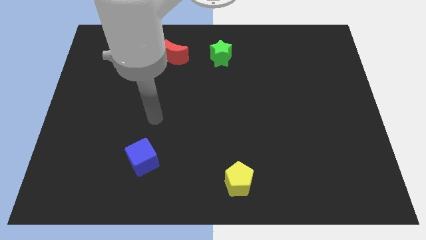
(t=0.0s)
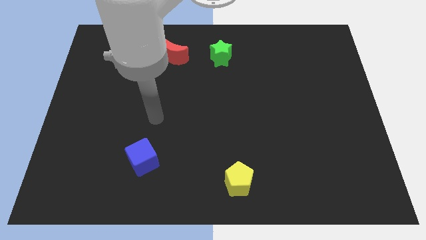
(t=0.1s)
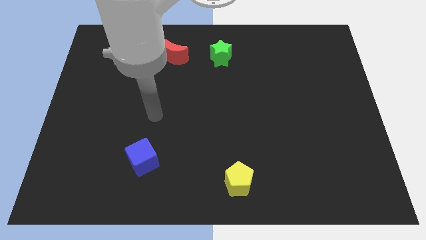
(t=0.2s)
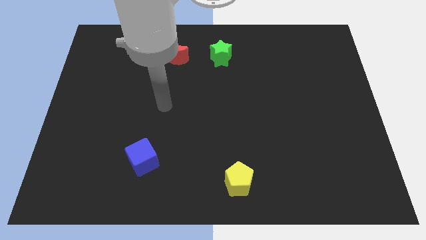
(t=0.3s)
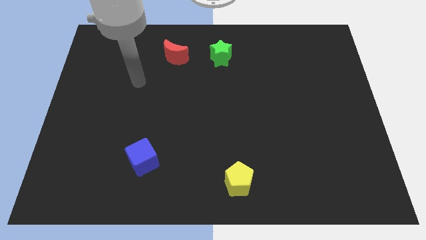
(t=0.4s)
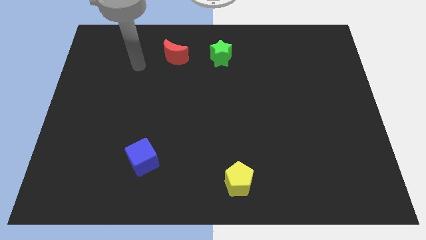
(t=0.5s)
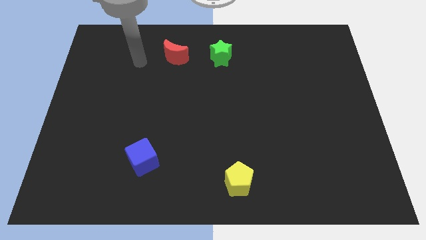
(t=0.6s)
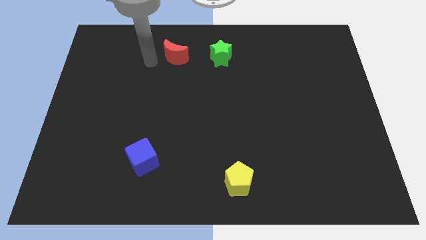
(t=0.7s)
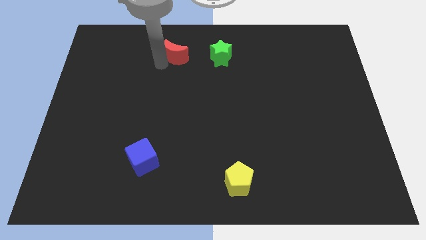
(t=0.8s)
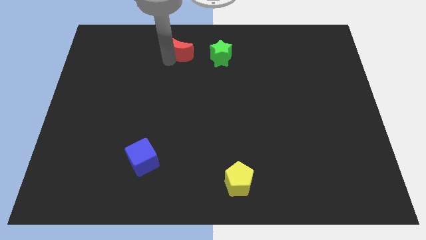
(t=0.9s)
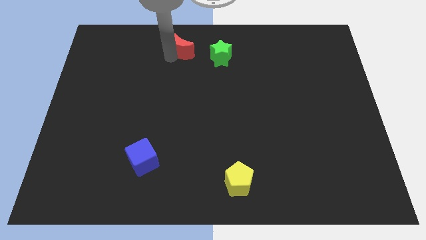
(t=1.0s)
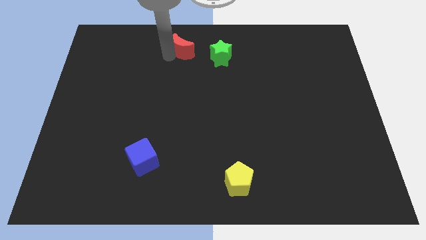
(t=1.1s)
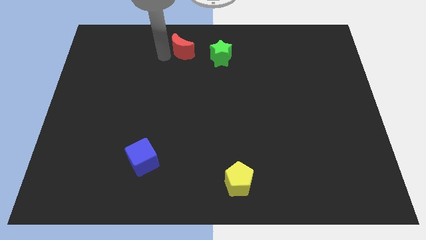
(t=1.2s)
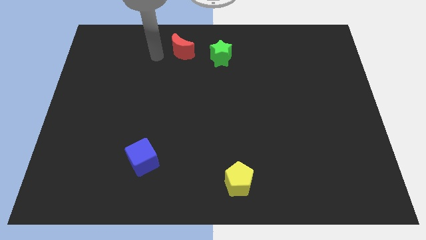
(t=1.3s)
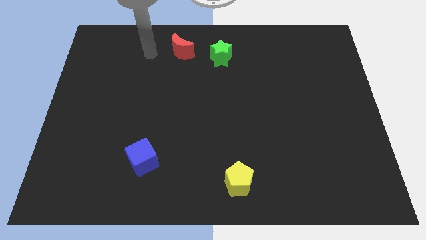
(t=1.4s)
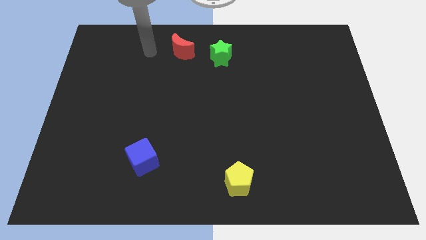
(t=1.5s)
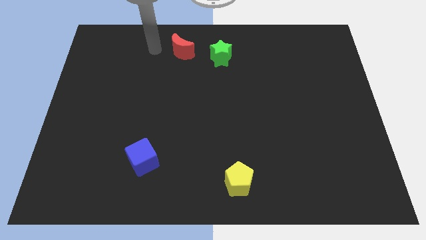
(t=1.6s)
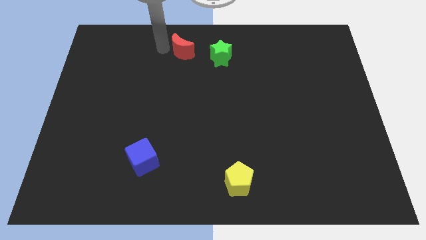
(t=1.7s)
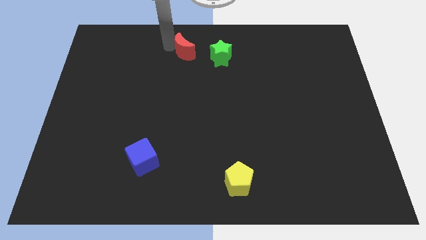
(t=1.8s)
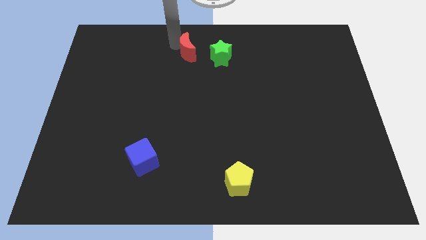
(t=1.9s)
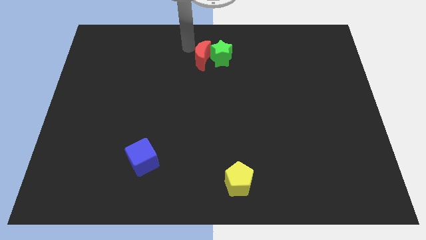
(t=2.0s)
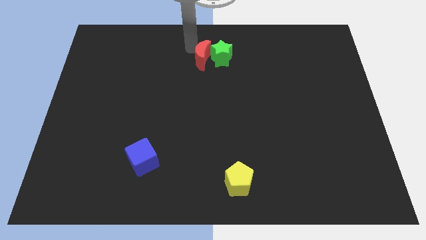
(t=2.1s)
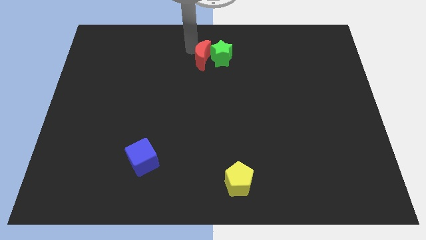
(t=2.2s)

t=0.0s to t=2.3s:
push the red block next to the green block

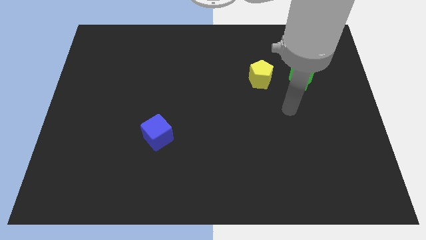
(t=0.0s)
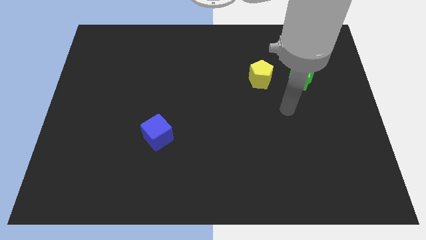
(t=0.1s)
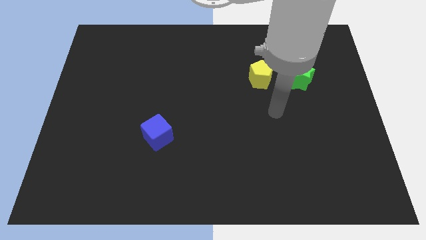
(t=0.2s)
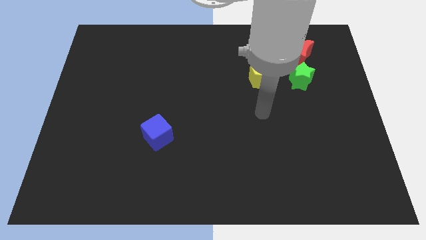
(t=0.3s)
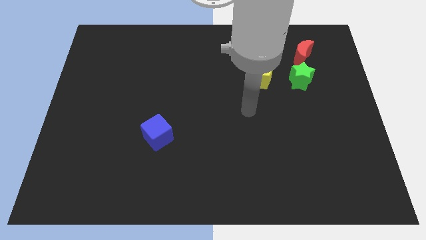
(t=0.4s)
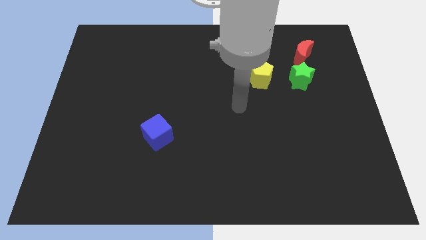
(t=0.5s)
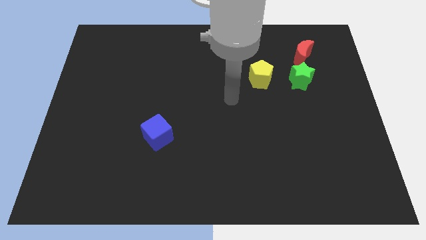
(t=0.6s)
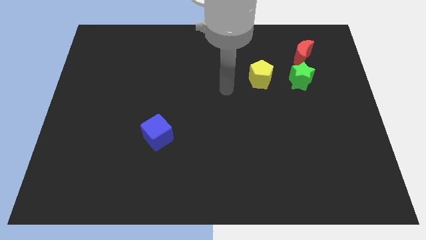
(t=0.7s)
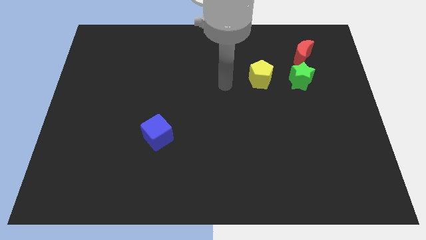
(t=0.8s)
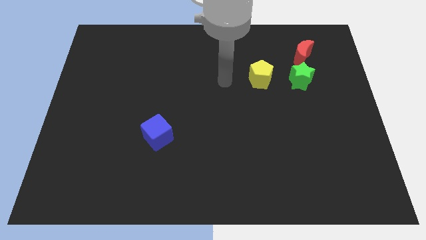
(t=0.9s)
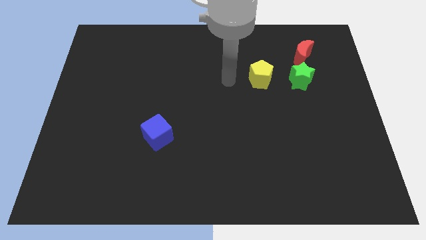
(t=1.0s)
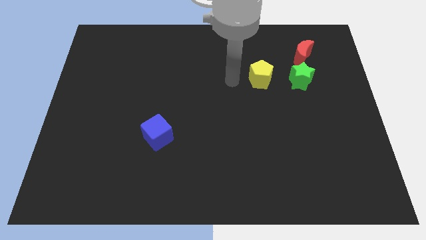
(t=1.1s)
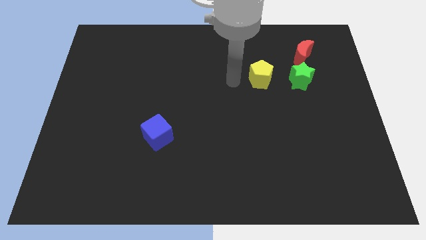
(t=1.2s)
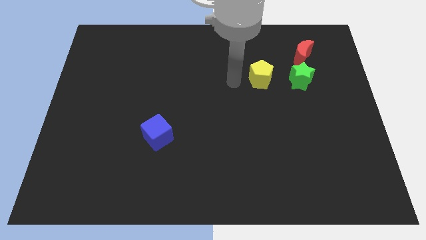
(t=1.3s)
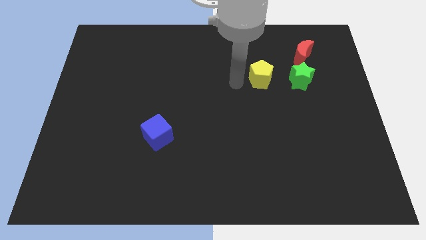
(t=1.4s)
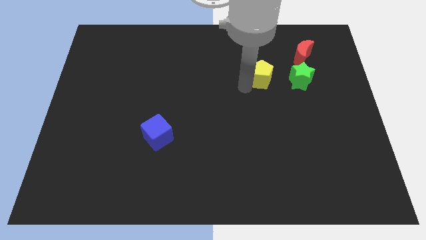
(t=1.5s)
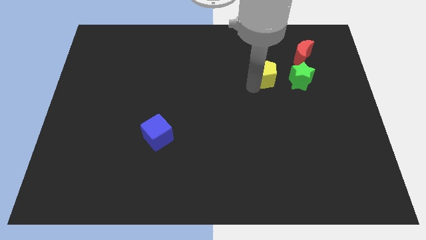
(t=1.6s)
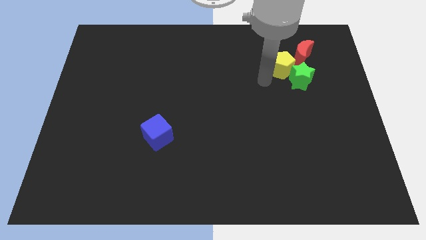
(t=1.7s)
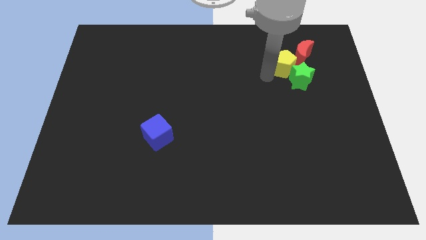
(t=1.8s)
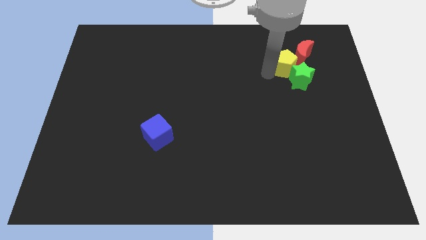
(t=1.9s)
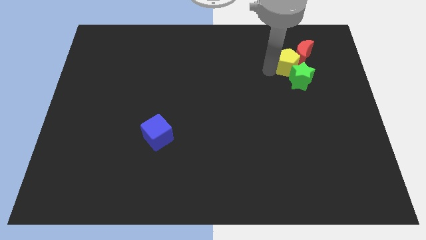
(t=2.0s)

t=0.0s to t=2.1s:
slide the yellow block towards the red block

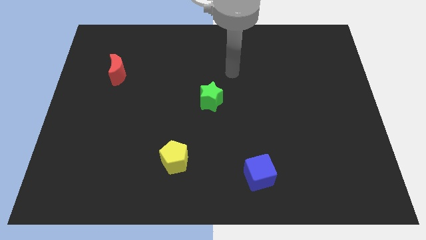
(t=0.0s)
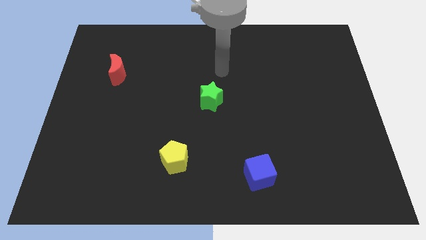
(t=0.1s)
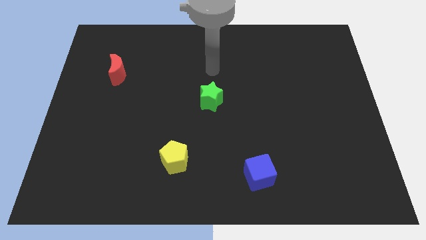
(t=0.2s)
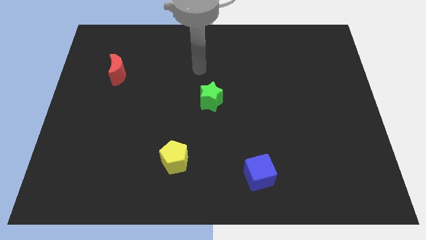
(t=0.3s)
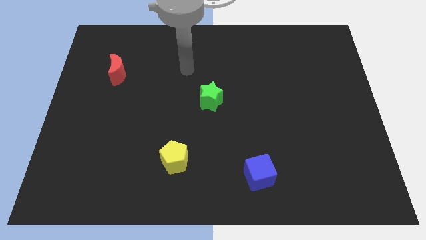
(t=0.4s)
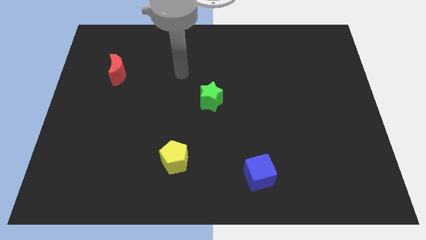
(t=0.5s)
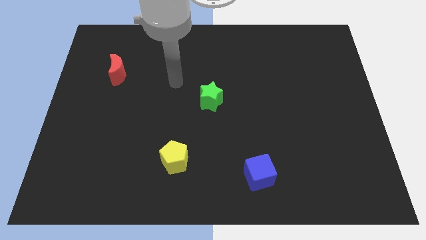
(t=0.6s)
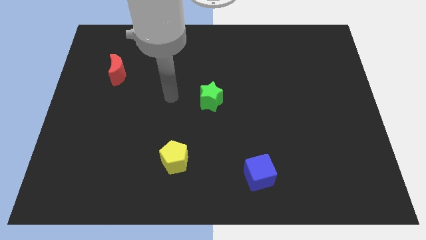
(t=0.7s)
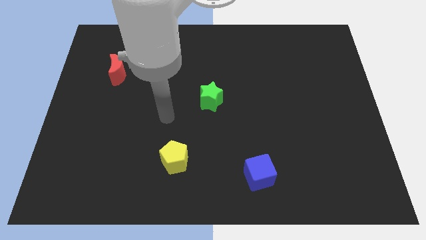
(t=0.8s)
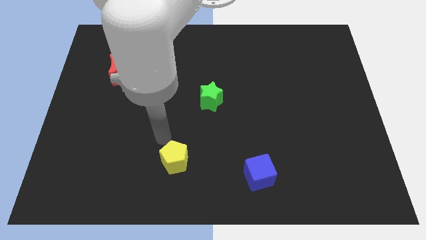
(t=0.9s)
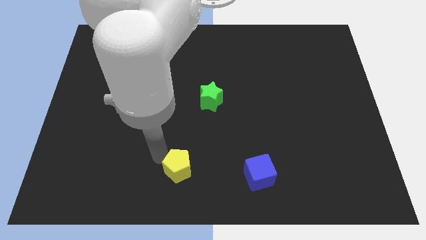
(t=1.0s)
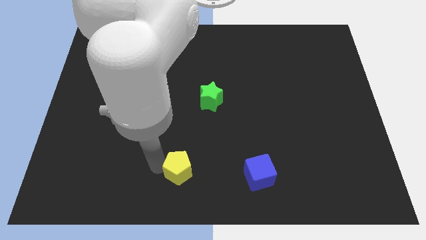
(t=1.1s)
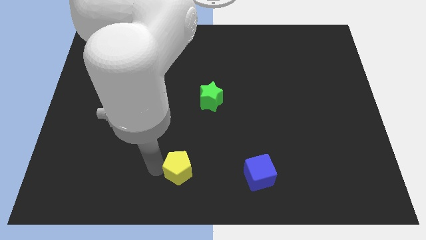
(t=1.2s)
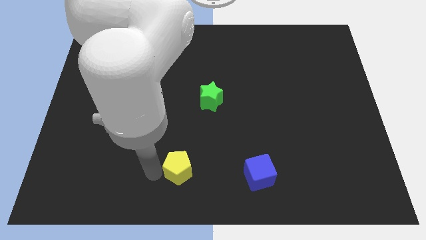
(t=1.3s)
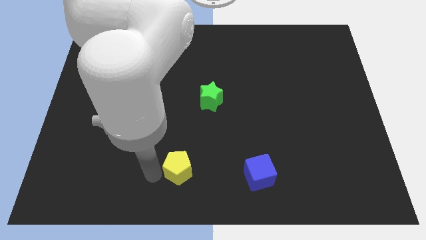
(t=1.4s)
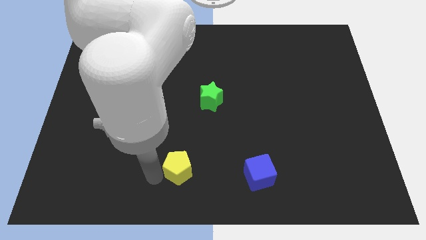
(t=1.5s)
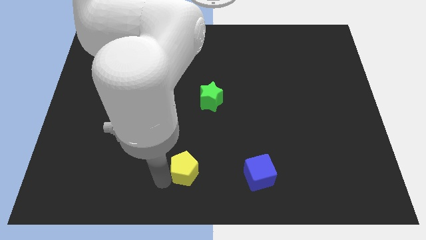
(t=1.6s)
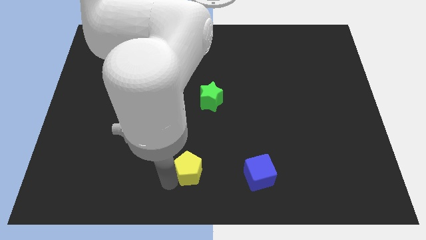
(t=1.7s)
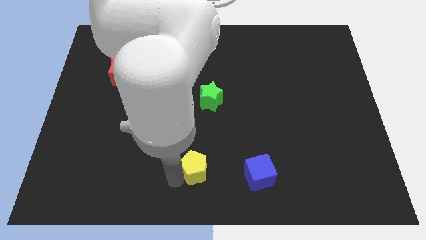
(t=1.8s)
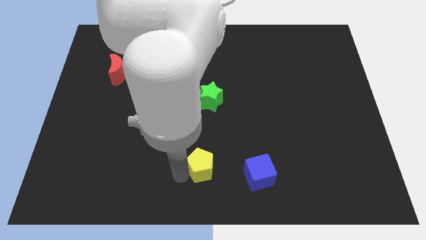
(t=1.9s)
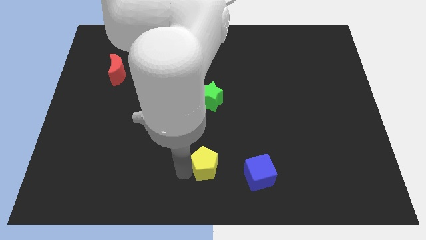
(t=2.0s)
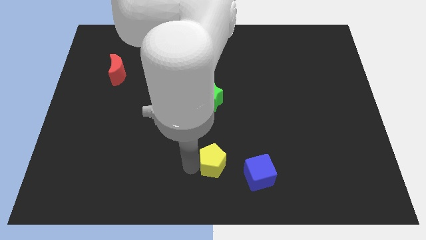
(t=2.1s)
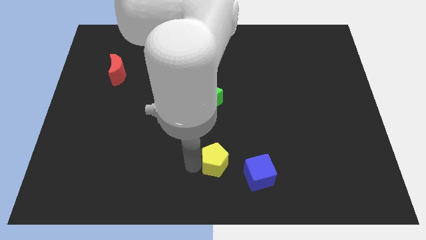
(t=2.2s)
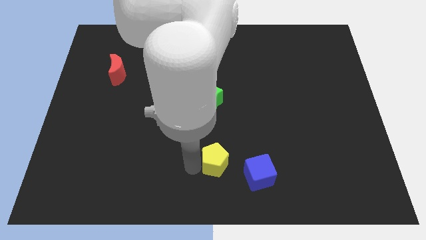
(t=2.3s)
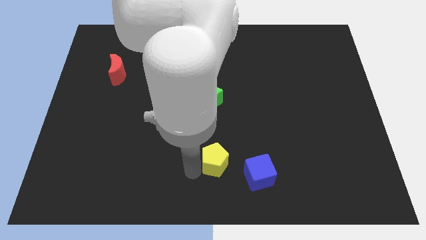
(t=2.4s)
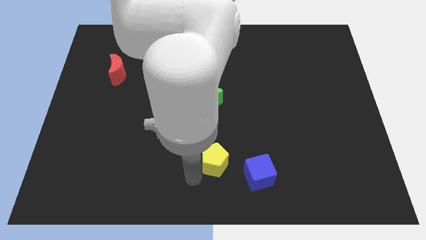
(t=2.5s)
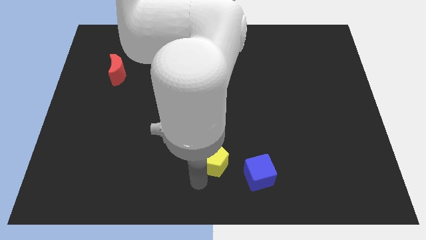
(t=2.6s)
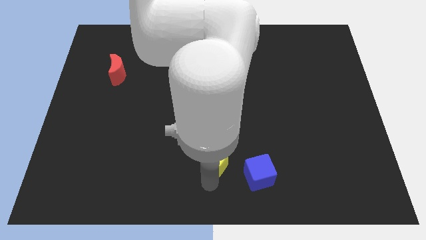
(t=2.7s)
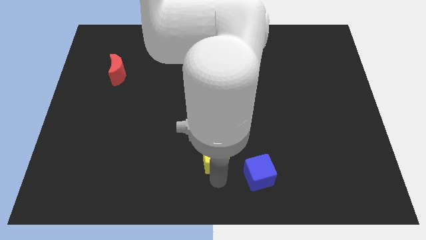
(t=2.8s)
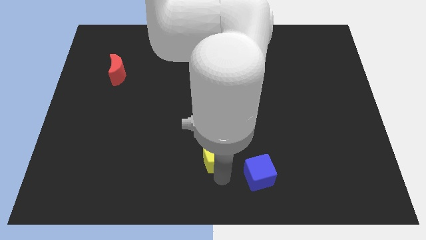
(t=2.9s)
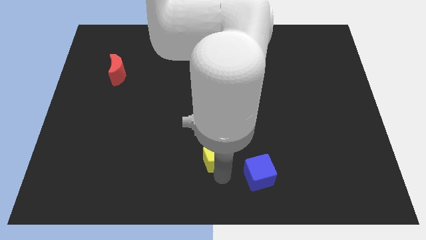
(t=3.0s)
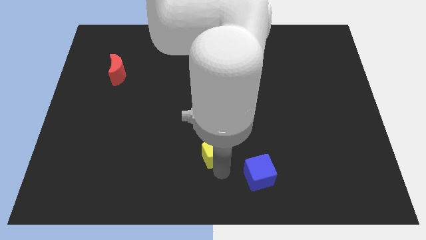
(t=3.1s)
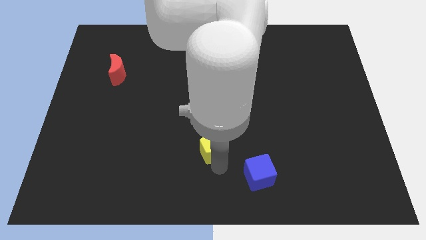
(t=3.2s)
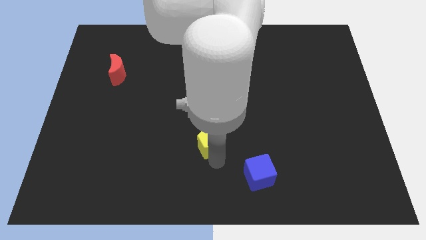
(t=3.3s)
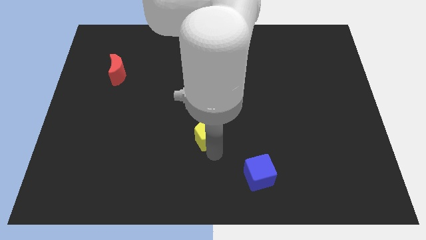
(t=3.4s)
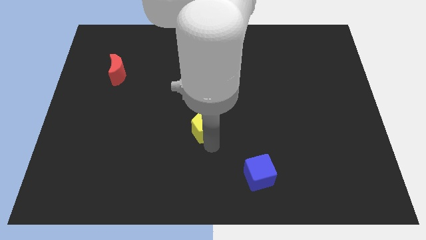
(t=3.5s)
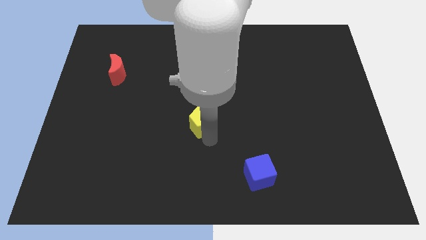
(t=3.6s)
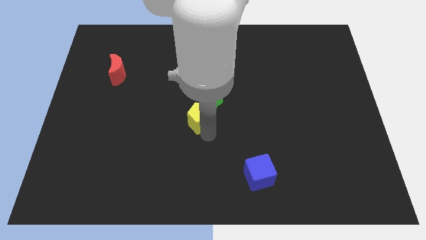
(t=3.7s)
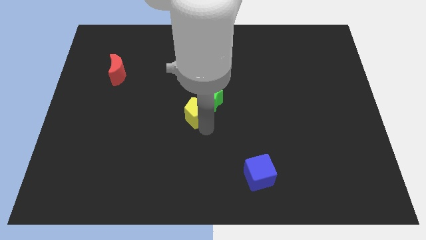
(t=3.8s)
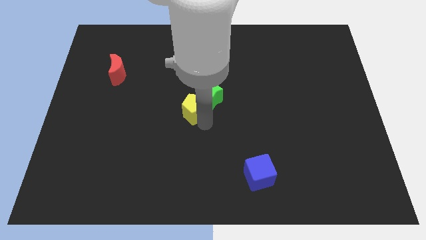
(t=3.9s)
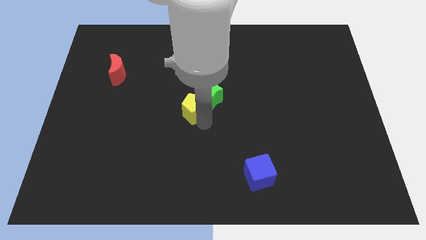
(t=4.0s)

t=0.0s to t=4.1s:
put the yellow block to the star
